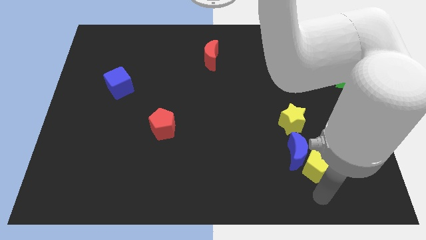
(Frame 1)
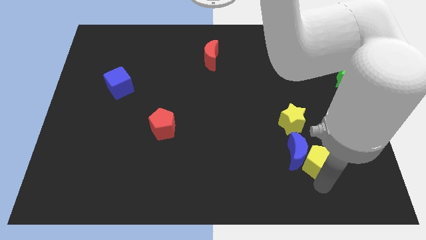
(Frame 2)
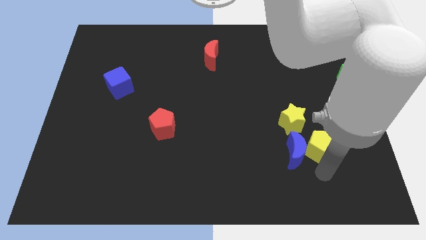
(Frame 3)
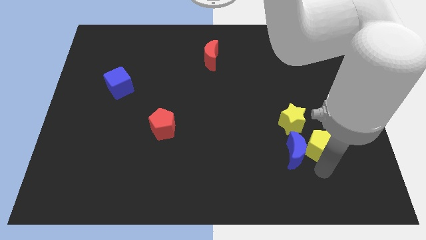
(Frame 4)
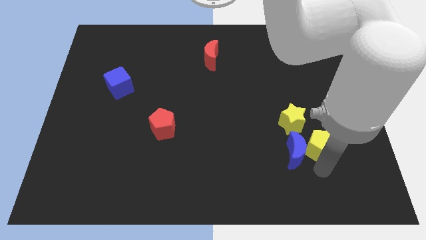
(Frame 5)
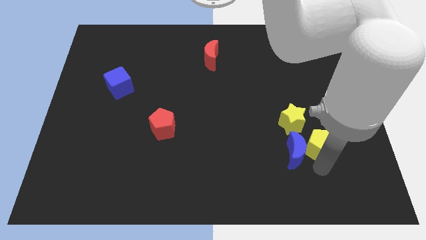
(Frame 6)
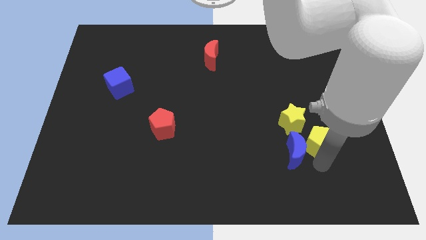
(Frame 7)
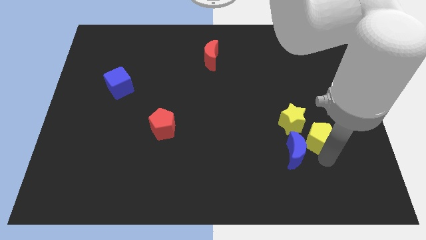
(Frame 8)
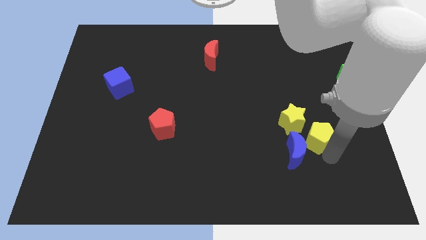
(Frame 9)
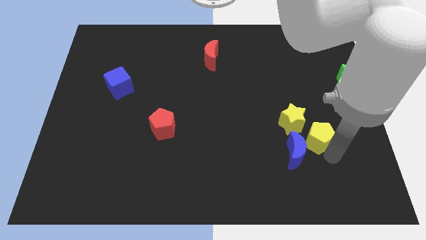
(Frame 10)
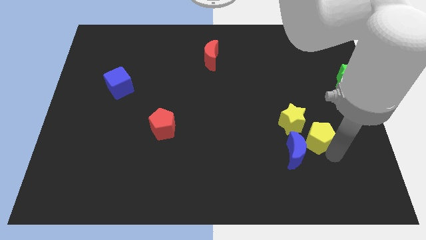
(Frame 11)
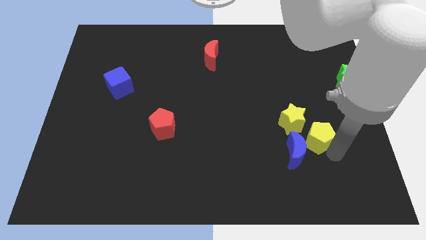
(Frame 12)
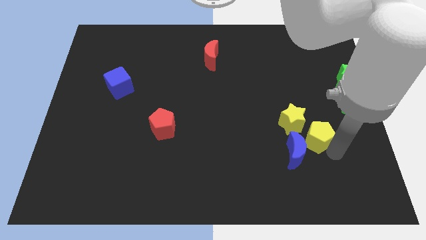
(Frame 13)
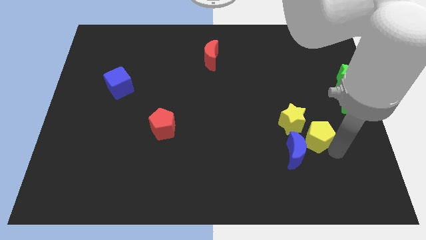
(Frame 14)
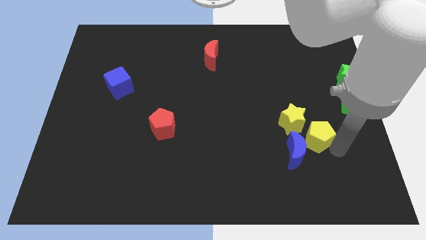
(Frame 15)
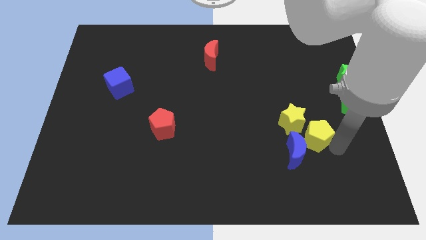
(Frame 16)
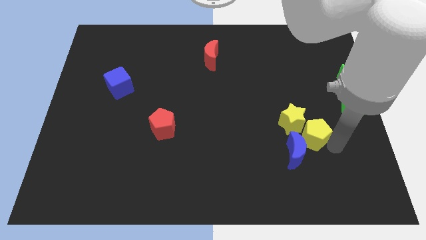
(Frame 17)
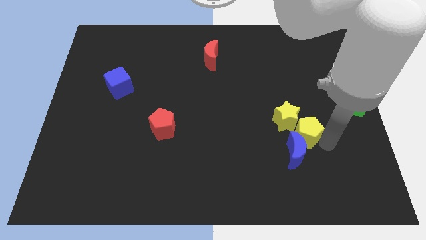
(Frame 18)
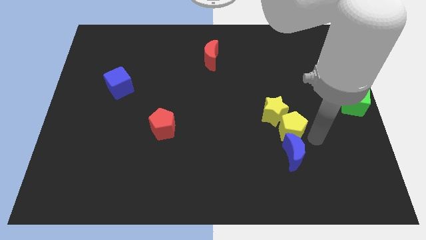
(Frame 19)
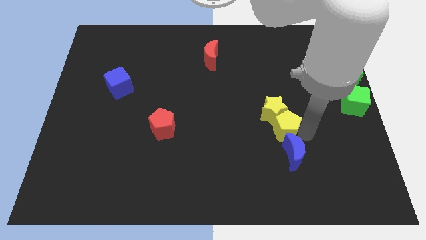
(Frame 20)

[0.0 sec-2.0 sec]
move the yellow pentagon into the yellow star

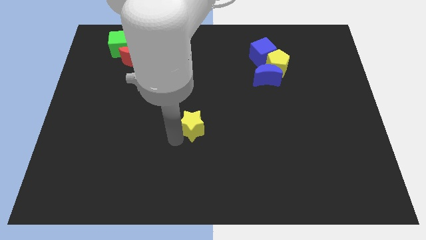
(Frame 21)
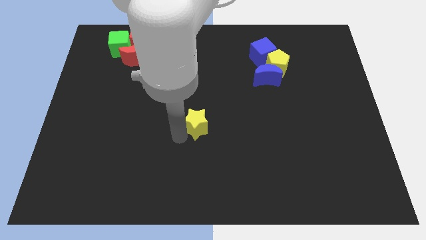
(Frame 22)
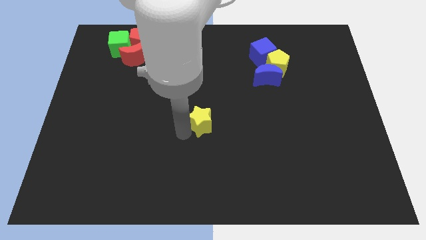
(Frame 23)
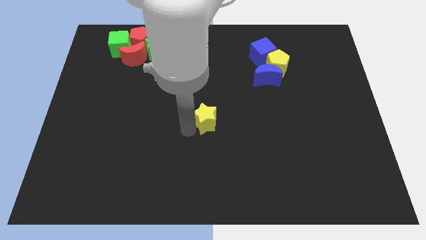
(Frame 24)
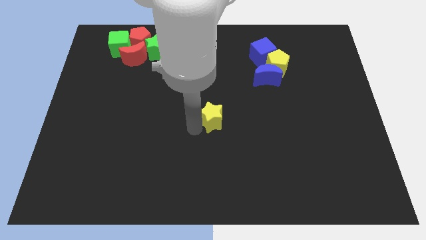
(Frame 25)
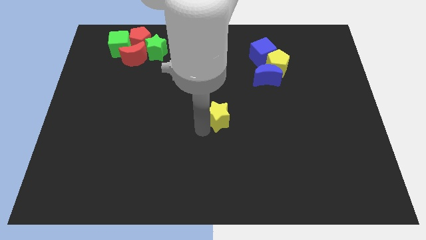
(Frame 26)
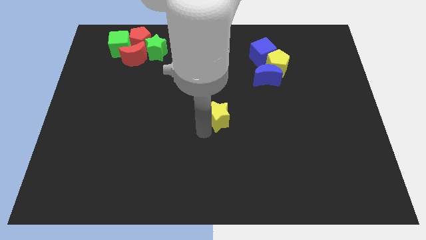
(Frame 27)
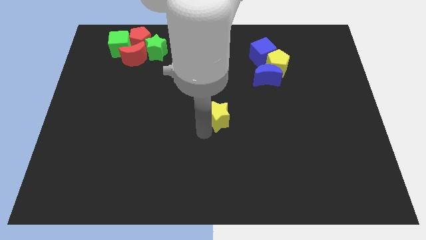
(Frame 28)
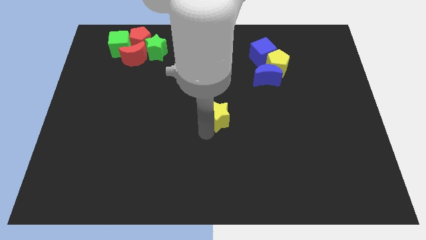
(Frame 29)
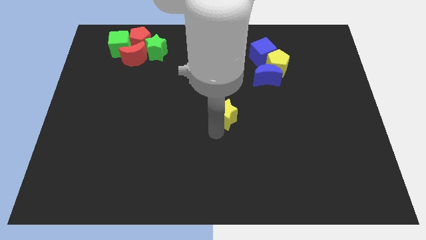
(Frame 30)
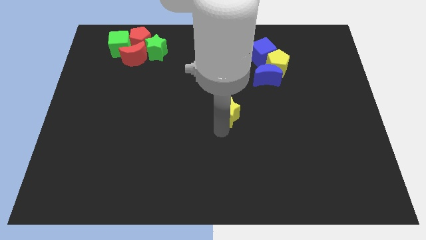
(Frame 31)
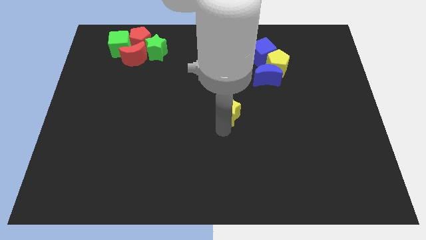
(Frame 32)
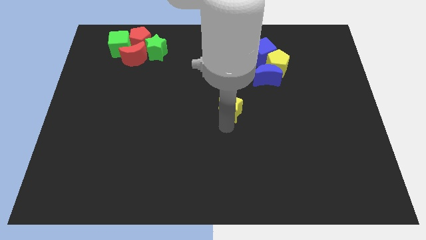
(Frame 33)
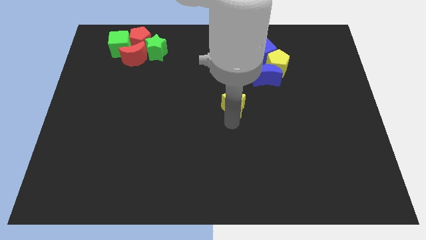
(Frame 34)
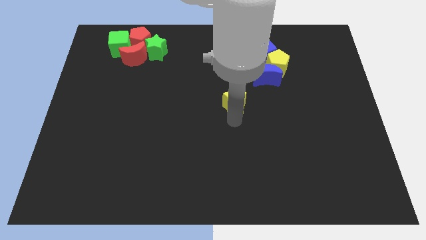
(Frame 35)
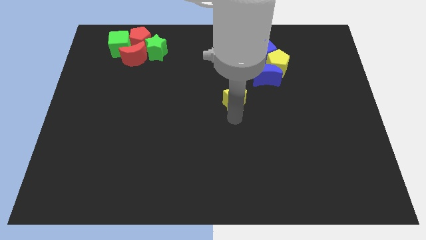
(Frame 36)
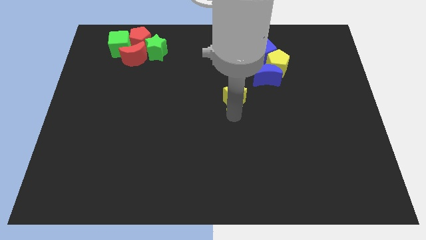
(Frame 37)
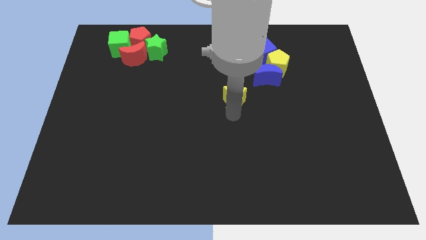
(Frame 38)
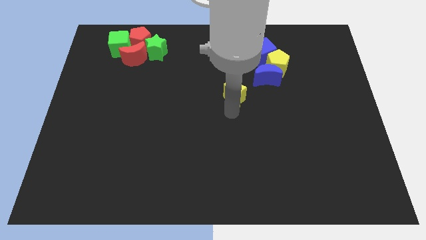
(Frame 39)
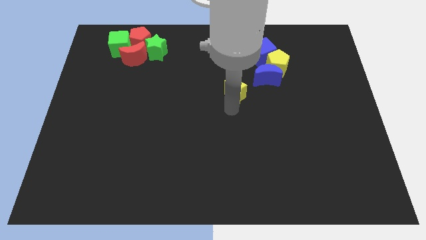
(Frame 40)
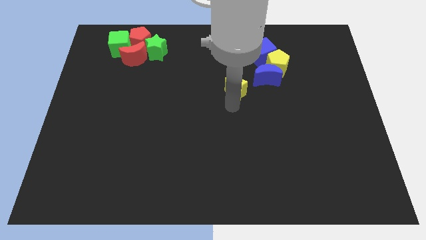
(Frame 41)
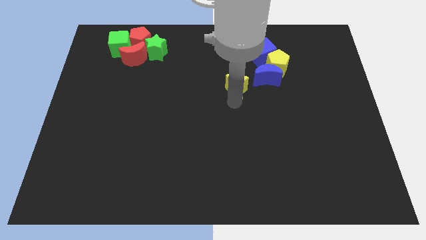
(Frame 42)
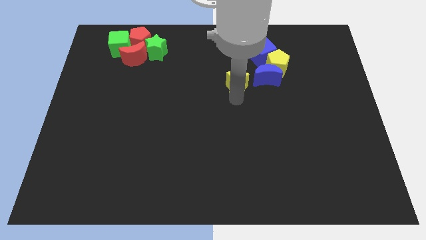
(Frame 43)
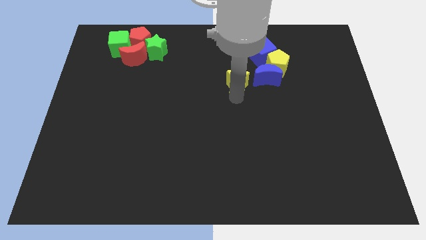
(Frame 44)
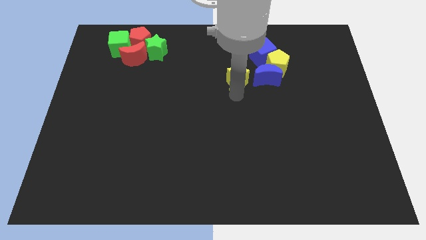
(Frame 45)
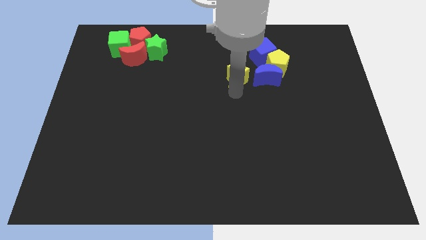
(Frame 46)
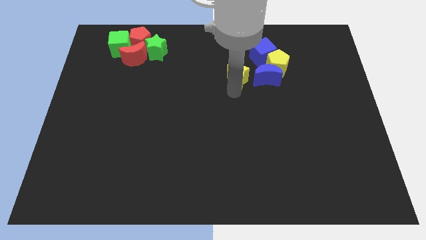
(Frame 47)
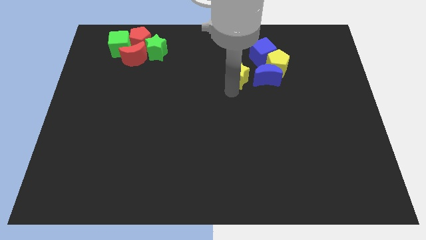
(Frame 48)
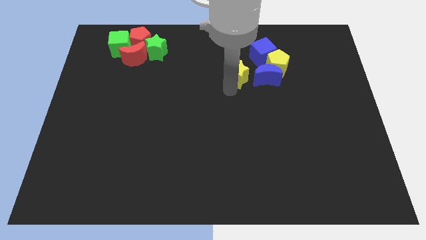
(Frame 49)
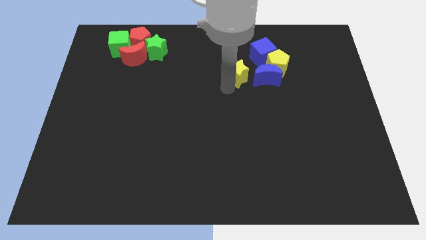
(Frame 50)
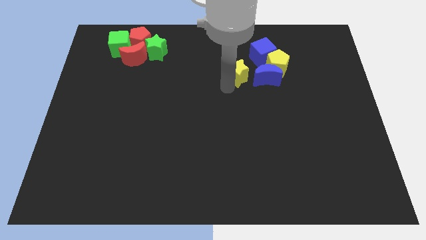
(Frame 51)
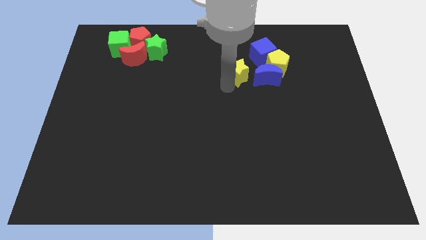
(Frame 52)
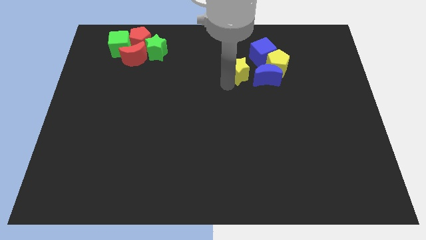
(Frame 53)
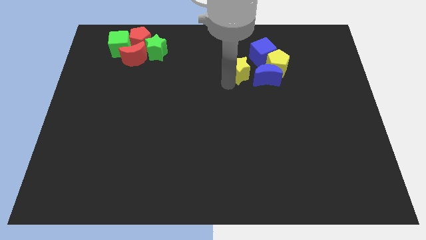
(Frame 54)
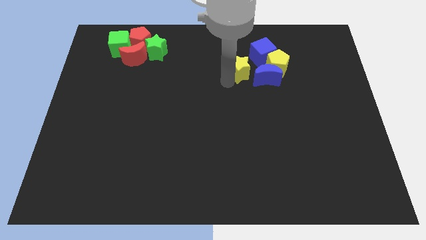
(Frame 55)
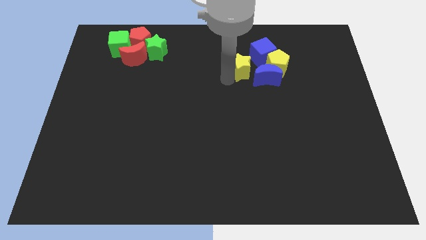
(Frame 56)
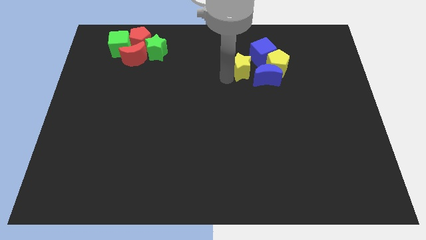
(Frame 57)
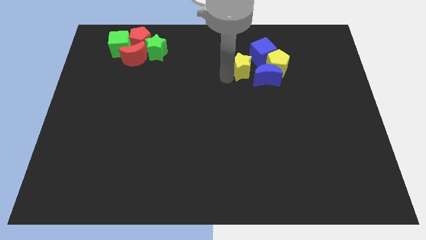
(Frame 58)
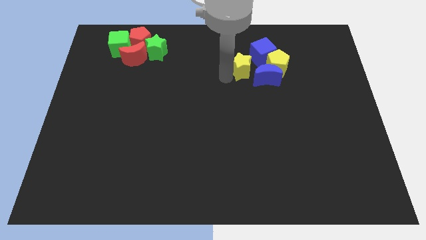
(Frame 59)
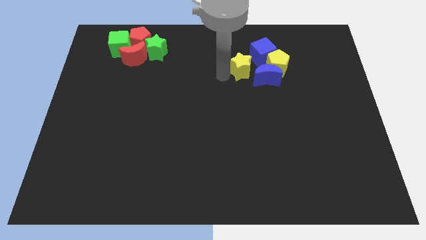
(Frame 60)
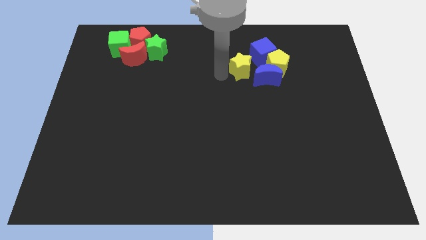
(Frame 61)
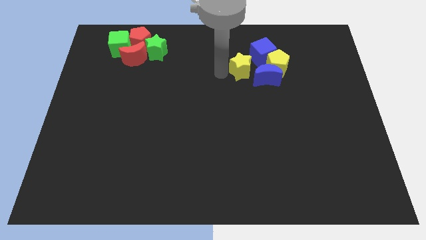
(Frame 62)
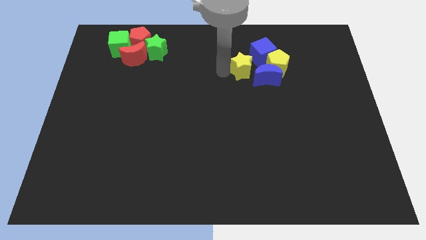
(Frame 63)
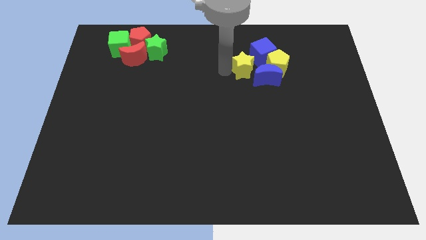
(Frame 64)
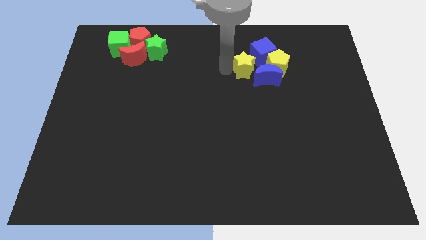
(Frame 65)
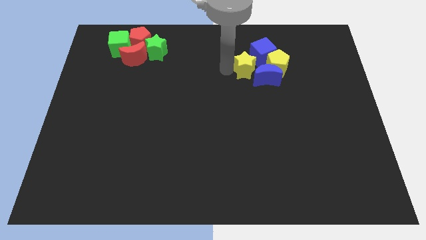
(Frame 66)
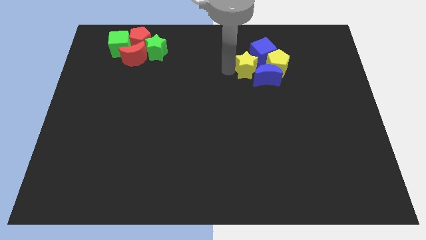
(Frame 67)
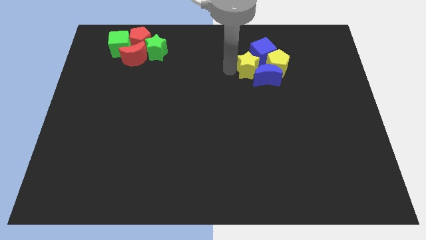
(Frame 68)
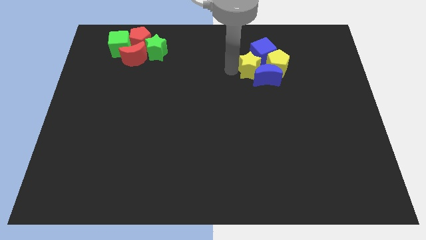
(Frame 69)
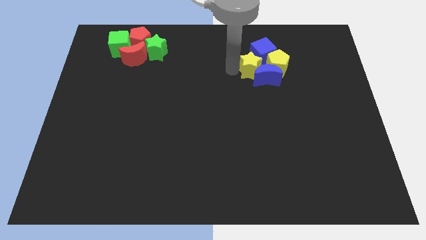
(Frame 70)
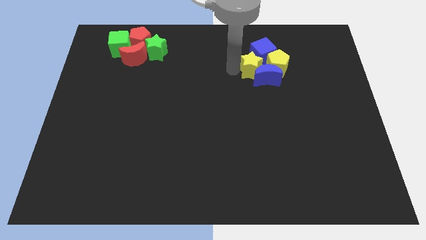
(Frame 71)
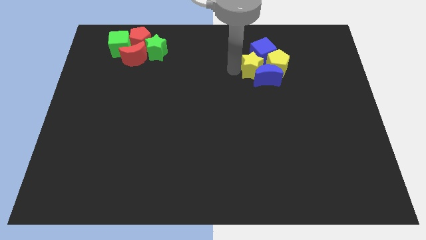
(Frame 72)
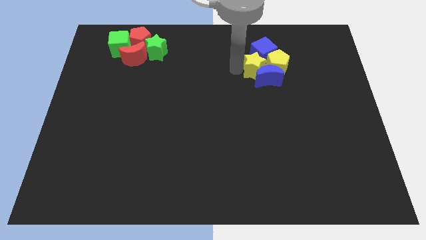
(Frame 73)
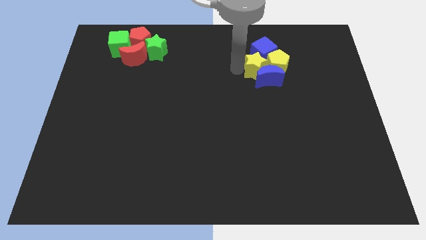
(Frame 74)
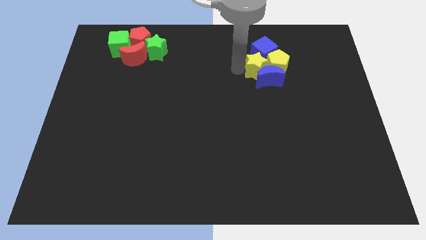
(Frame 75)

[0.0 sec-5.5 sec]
place the yellow star towards the group of stars

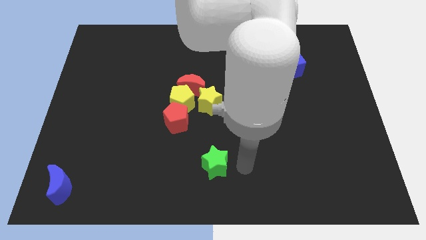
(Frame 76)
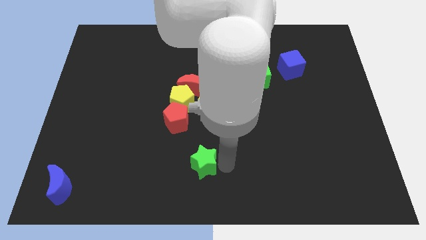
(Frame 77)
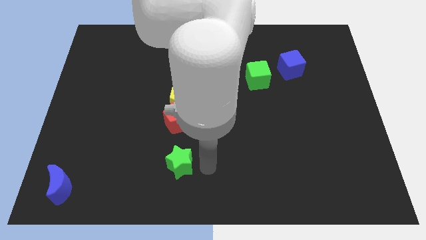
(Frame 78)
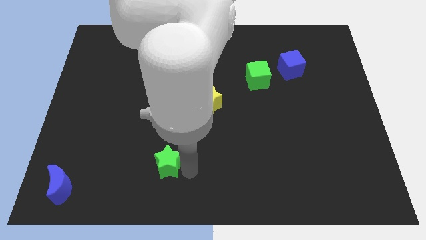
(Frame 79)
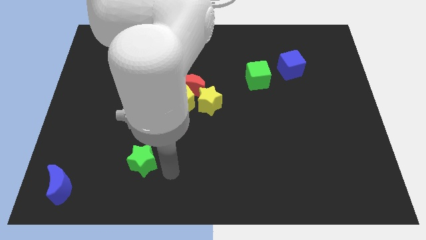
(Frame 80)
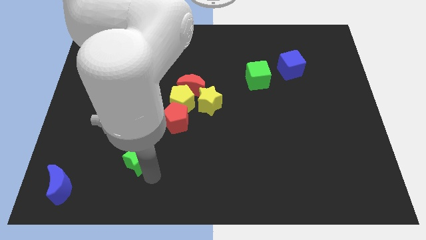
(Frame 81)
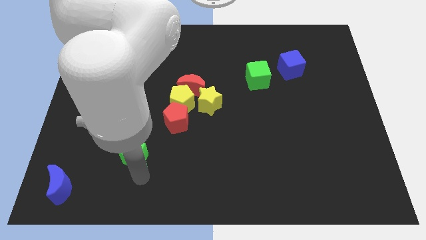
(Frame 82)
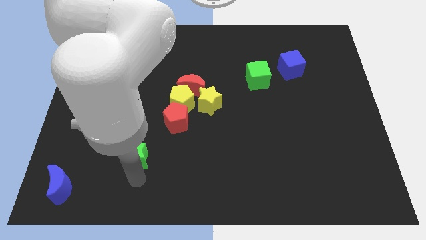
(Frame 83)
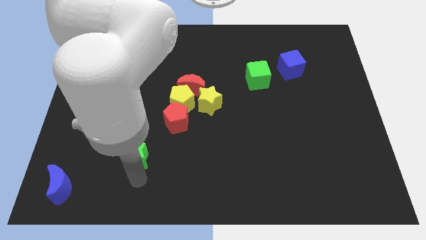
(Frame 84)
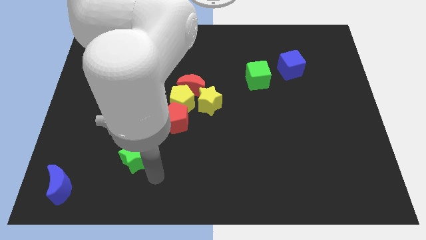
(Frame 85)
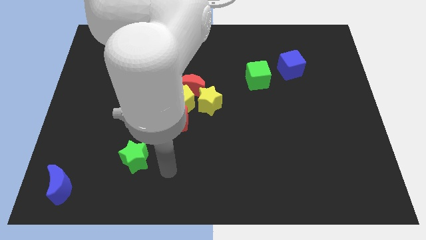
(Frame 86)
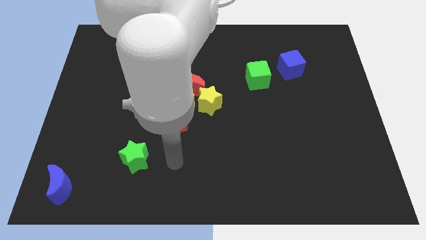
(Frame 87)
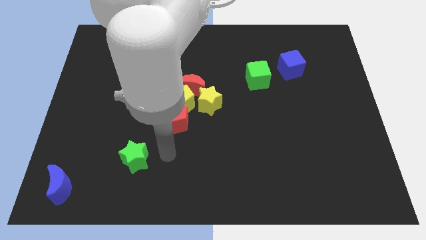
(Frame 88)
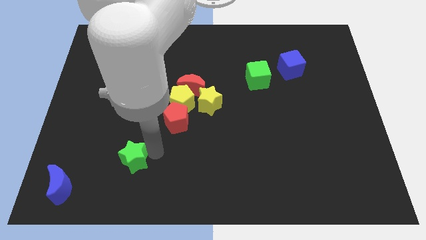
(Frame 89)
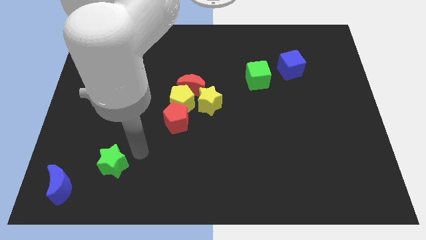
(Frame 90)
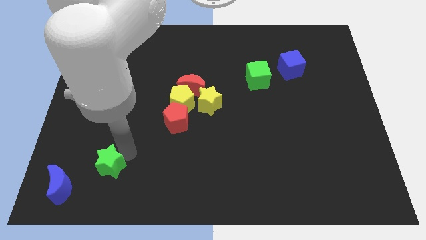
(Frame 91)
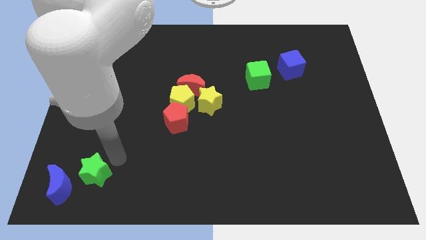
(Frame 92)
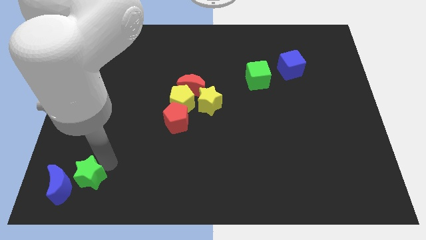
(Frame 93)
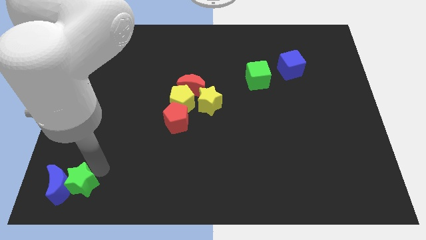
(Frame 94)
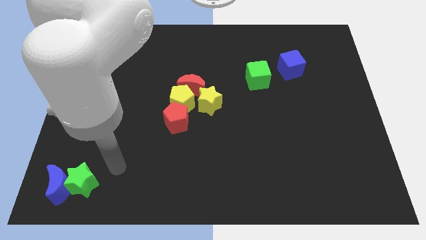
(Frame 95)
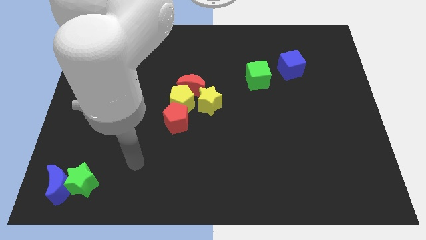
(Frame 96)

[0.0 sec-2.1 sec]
push the green star towards the right side of the blue crescente
